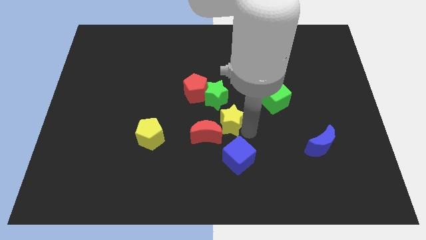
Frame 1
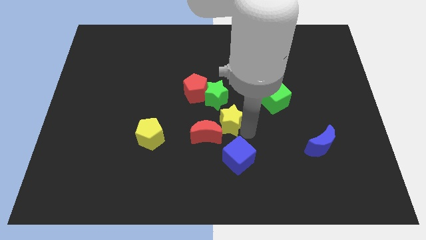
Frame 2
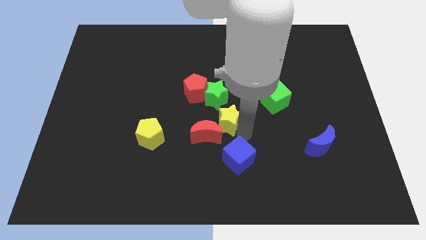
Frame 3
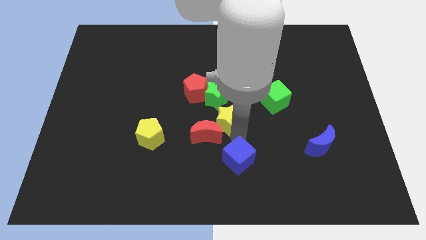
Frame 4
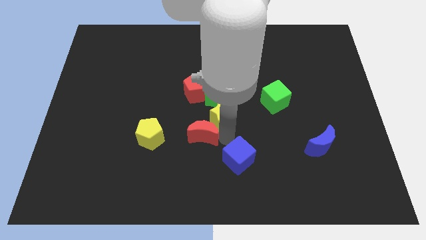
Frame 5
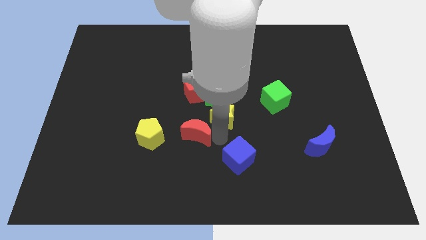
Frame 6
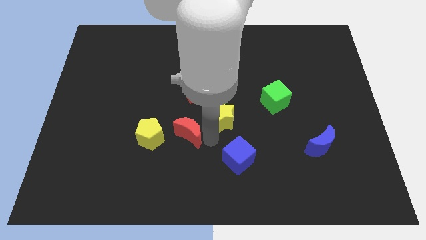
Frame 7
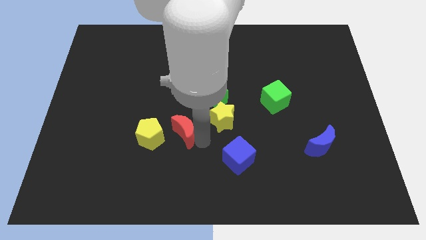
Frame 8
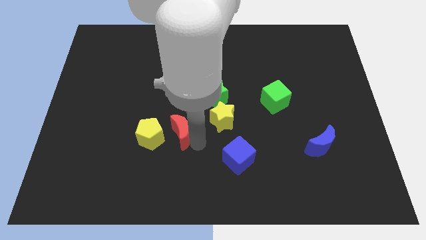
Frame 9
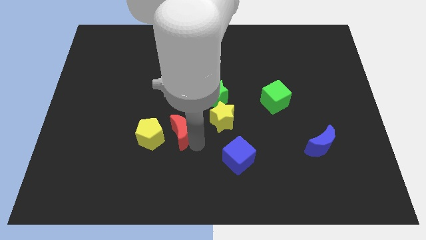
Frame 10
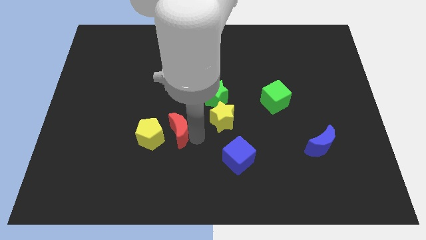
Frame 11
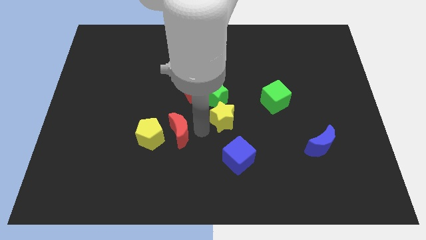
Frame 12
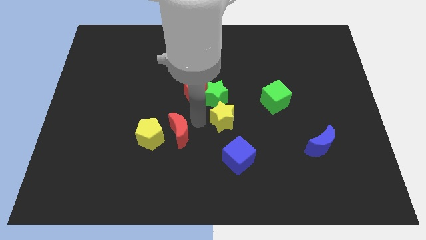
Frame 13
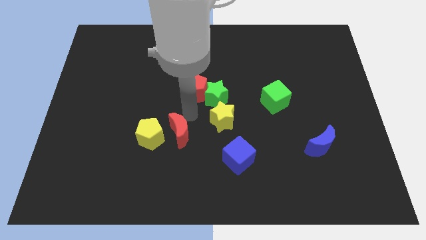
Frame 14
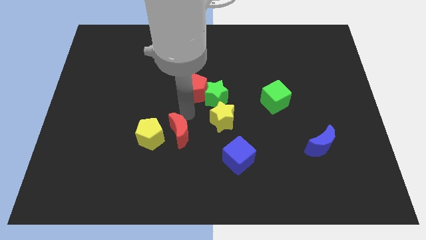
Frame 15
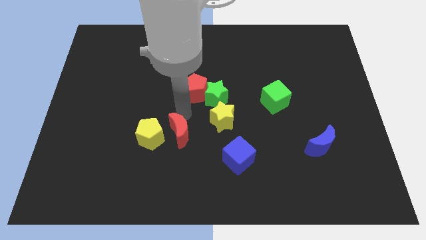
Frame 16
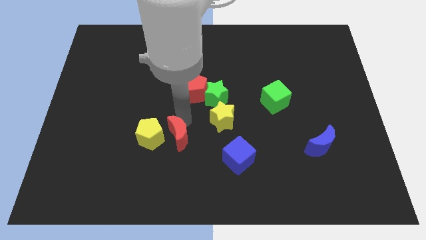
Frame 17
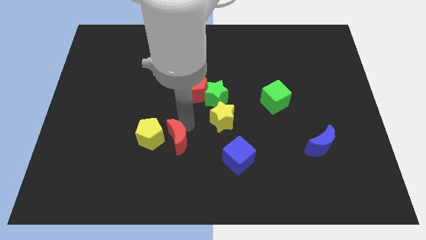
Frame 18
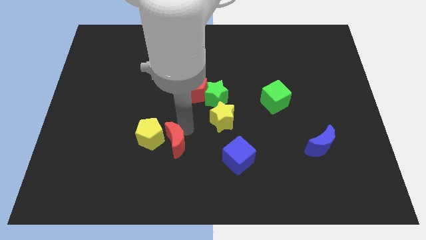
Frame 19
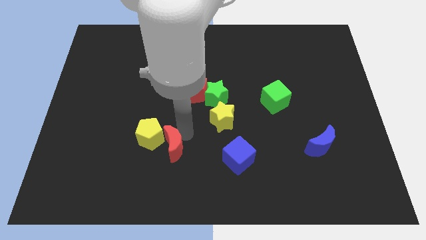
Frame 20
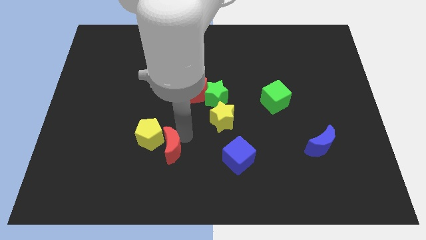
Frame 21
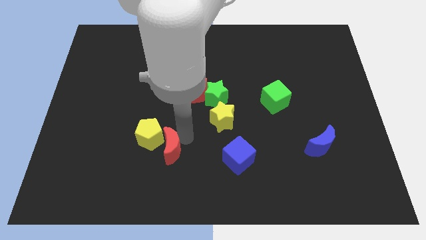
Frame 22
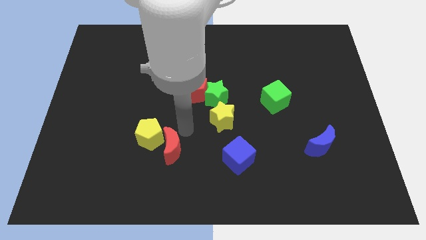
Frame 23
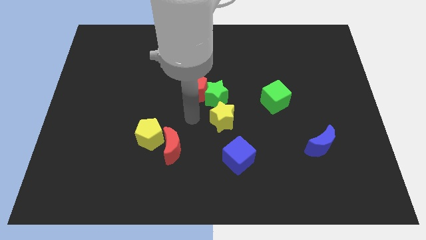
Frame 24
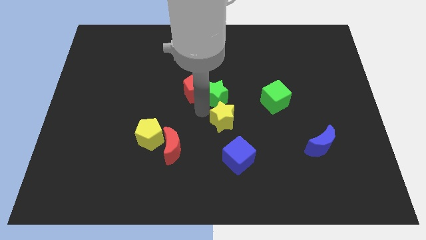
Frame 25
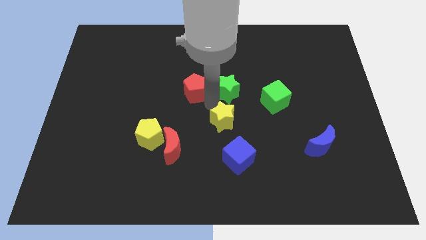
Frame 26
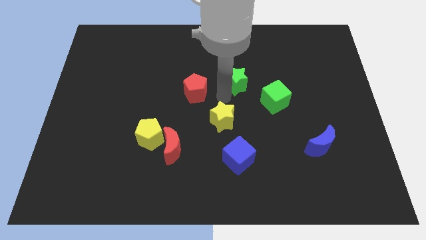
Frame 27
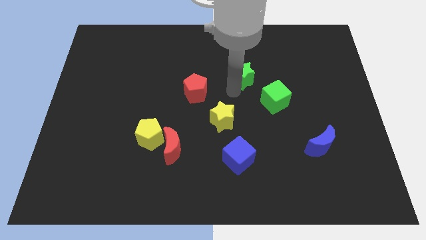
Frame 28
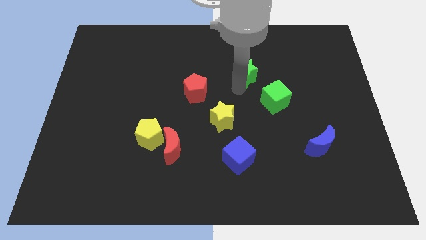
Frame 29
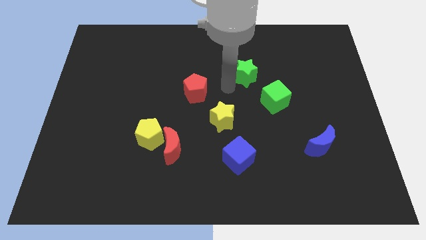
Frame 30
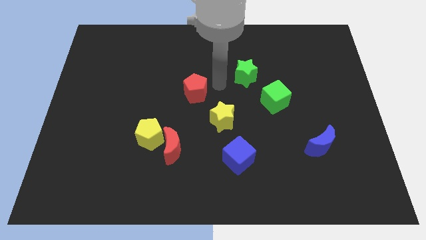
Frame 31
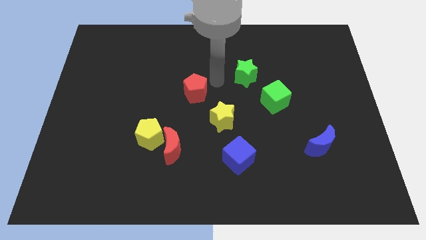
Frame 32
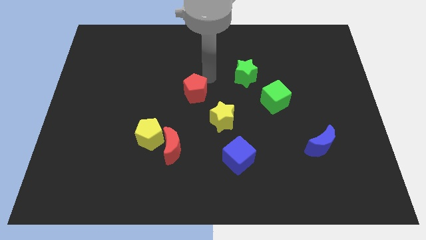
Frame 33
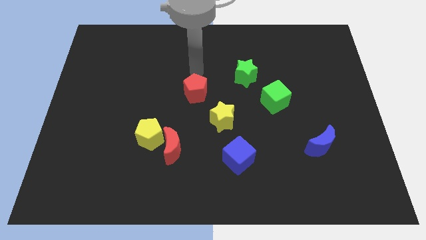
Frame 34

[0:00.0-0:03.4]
separate green star and the red moon from the yellow star

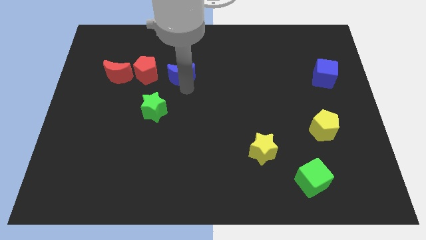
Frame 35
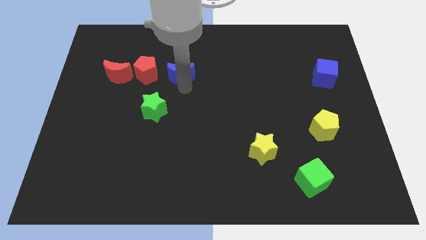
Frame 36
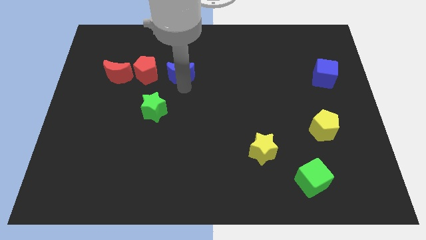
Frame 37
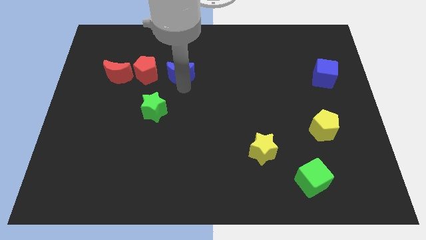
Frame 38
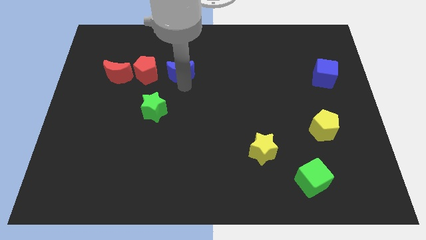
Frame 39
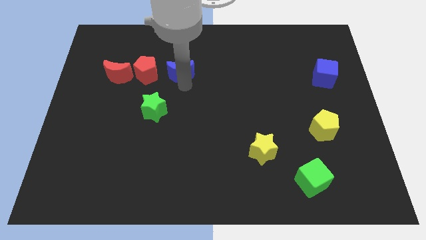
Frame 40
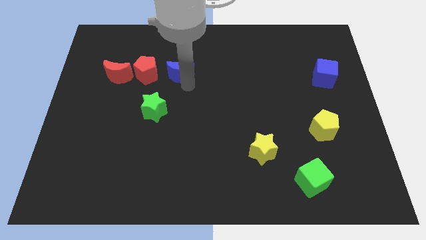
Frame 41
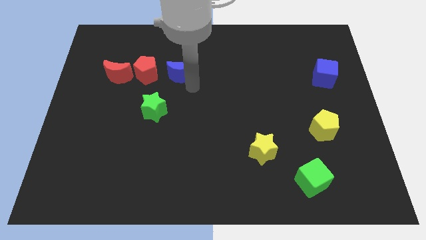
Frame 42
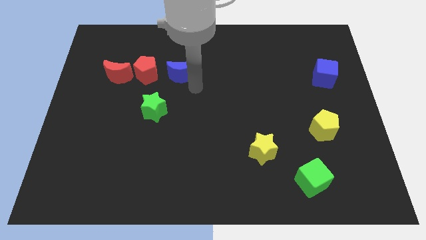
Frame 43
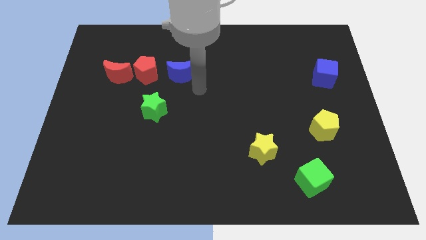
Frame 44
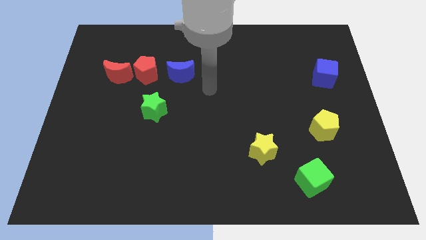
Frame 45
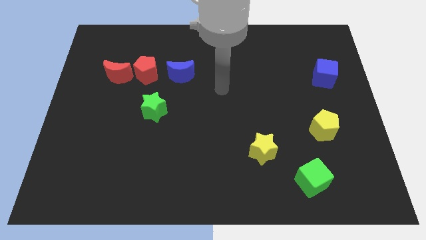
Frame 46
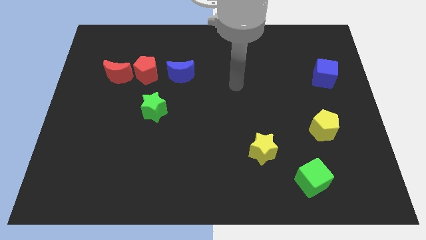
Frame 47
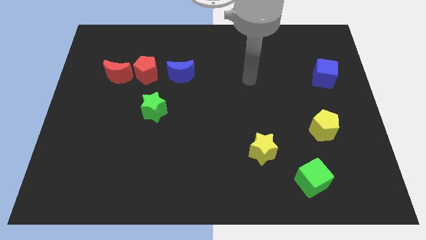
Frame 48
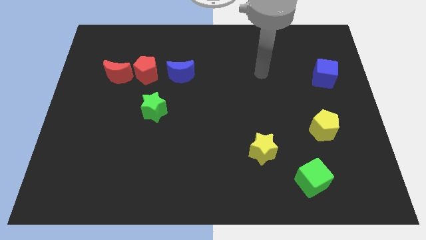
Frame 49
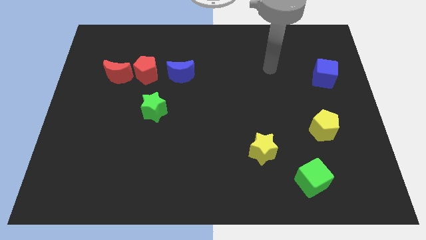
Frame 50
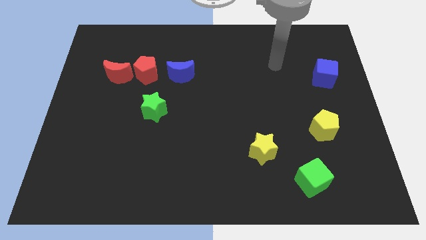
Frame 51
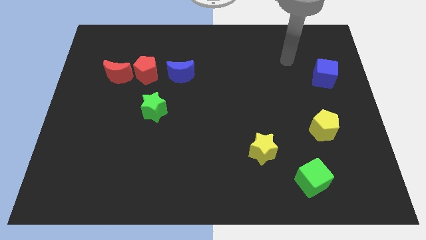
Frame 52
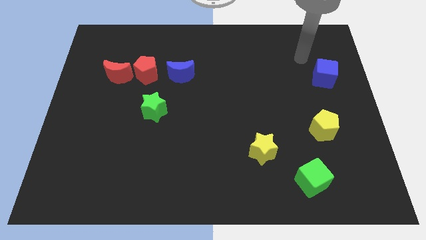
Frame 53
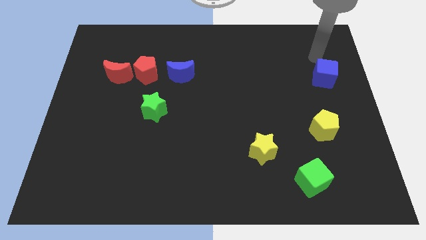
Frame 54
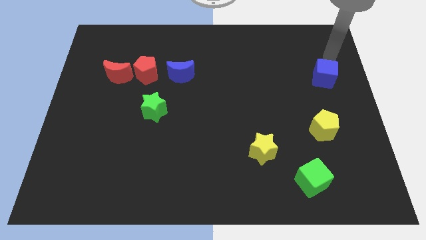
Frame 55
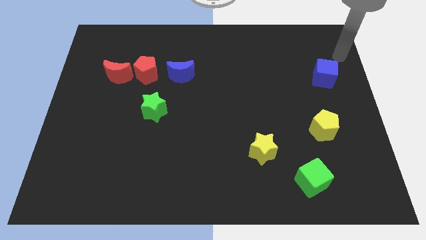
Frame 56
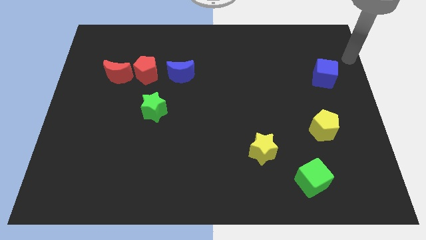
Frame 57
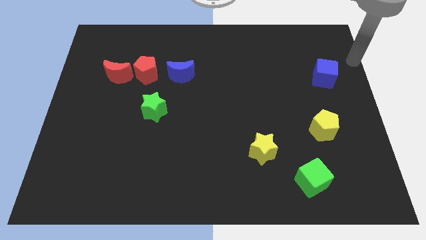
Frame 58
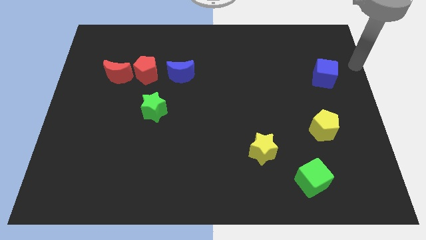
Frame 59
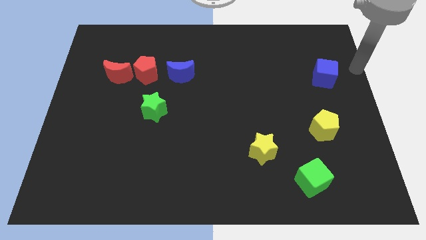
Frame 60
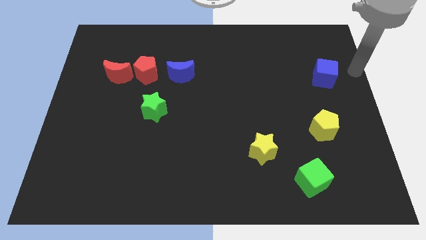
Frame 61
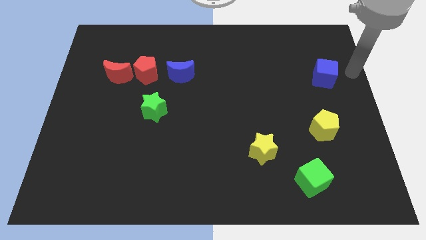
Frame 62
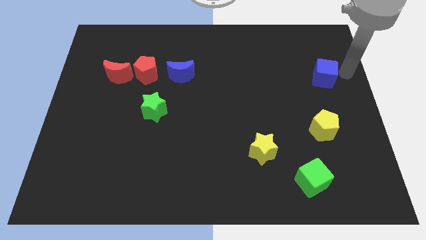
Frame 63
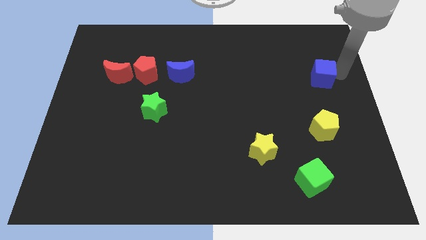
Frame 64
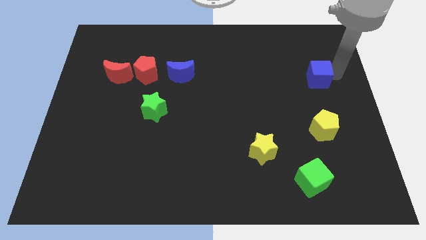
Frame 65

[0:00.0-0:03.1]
tap the right side of the blue cube

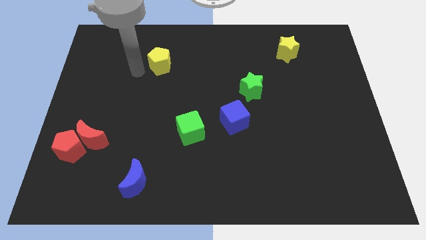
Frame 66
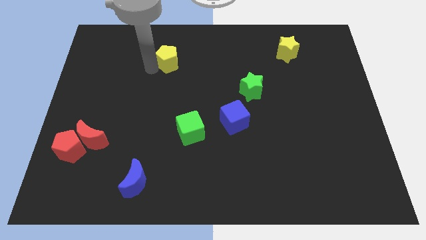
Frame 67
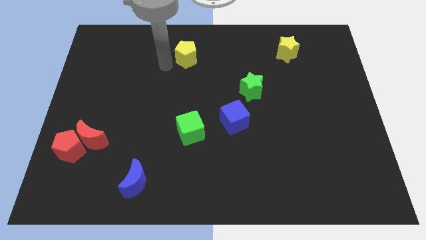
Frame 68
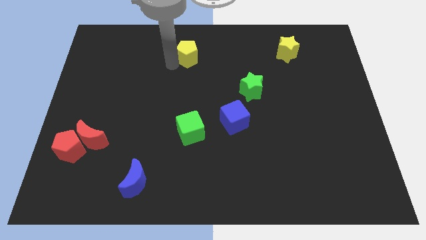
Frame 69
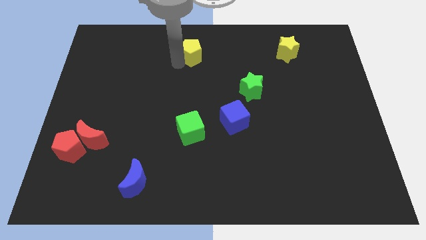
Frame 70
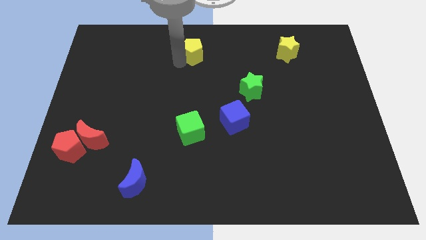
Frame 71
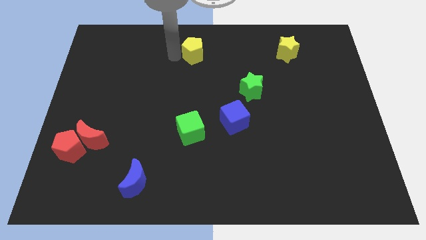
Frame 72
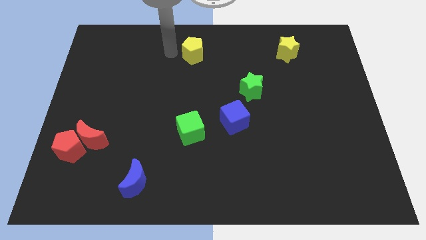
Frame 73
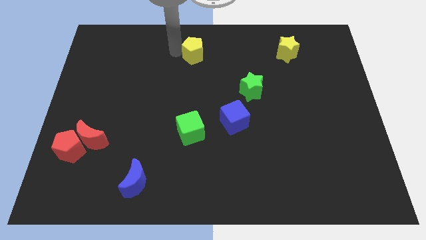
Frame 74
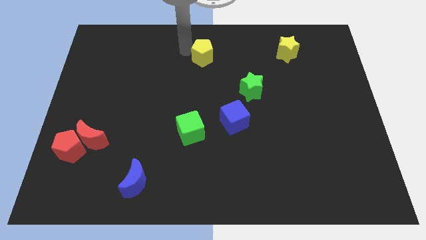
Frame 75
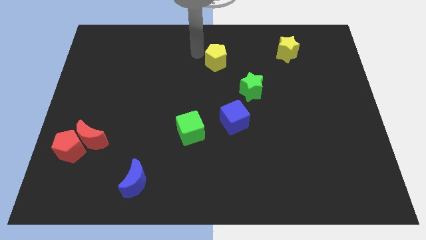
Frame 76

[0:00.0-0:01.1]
move the yellow pentagon to the right of the board

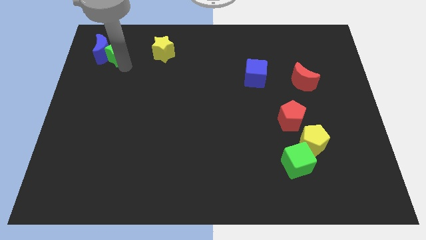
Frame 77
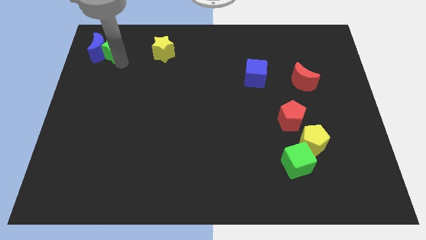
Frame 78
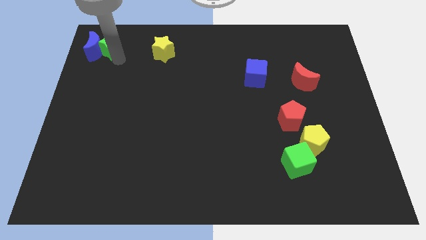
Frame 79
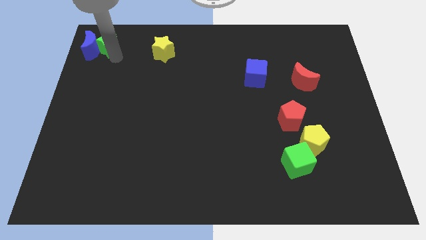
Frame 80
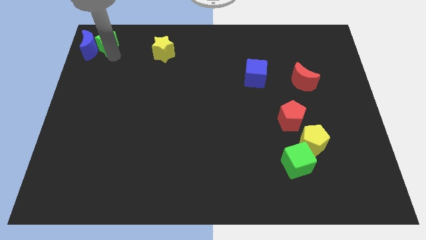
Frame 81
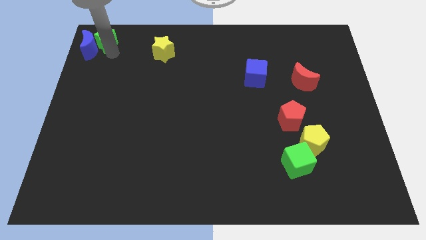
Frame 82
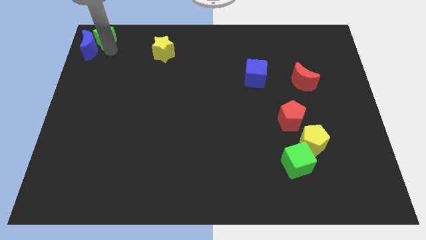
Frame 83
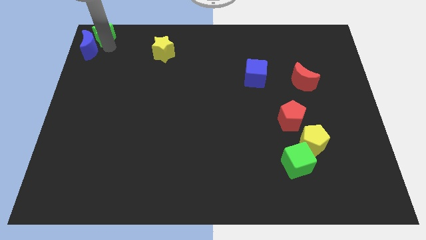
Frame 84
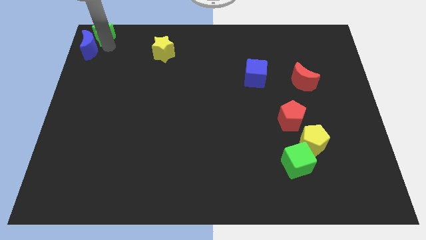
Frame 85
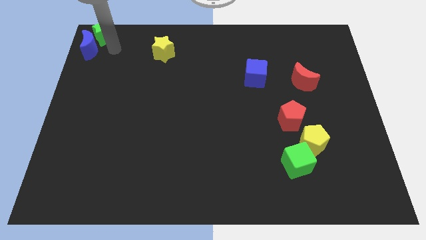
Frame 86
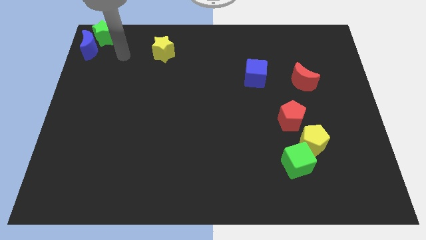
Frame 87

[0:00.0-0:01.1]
move green star to the top left corner of the board

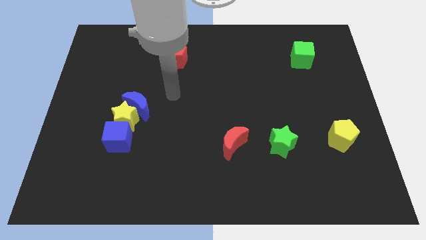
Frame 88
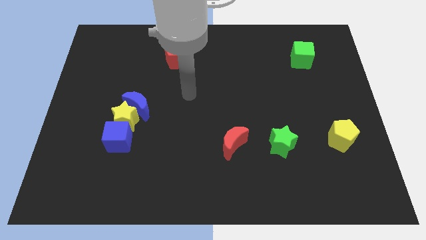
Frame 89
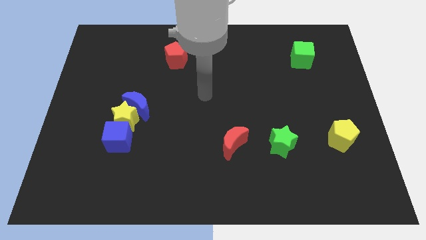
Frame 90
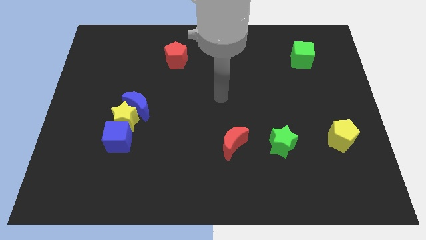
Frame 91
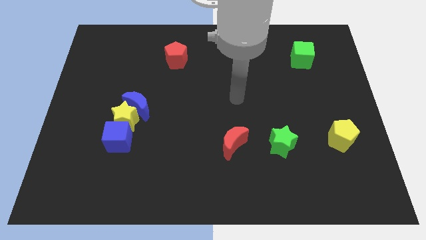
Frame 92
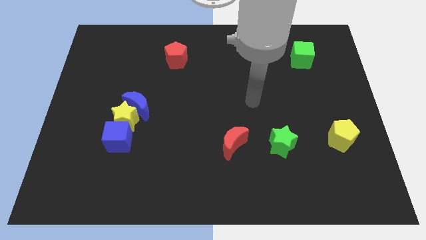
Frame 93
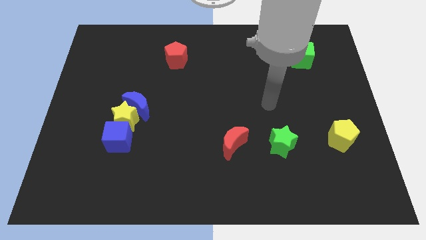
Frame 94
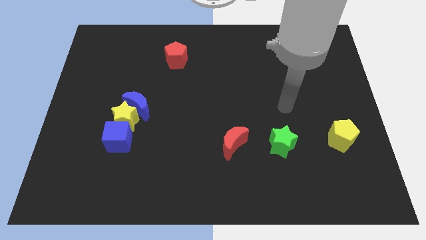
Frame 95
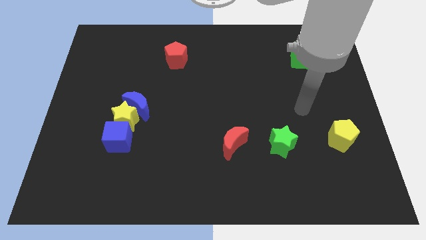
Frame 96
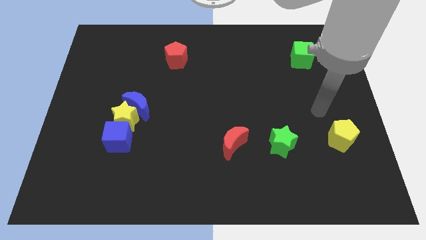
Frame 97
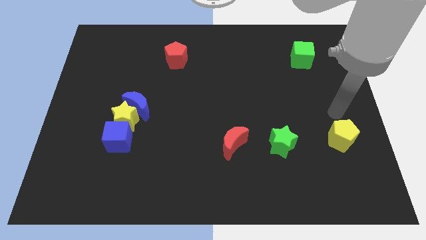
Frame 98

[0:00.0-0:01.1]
move your arm towards the yellow pentagon
